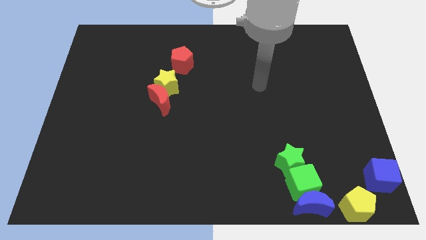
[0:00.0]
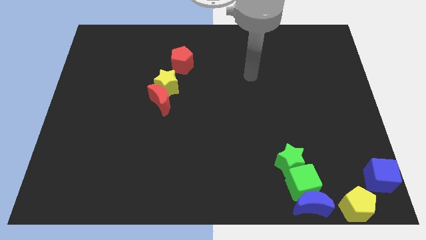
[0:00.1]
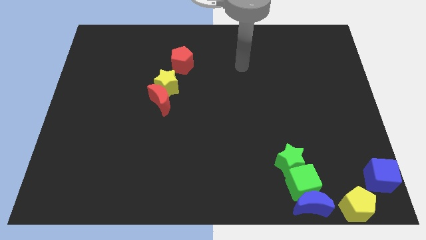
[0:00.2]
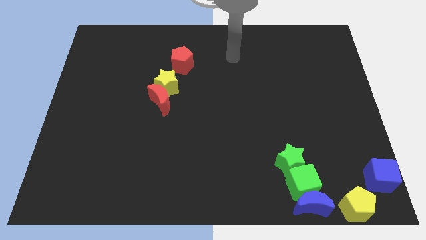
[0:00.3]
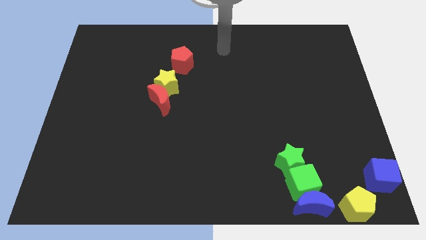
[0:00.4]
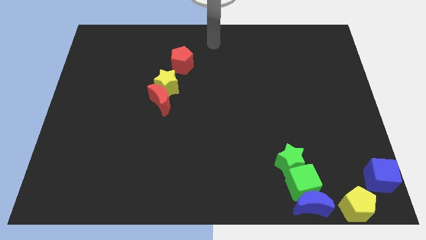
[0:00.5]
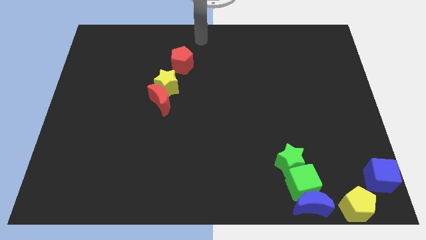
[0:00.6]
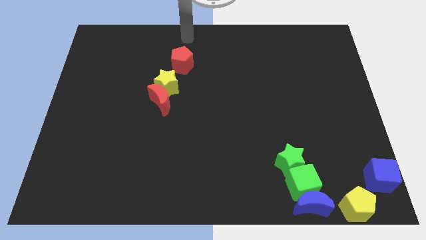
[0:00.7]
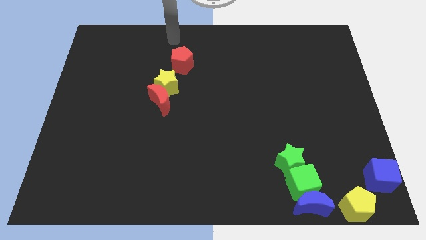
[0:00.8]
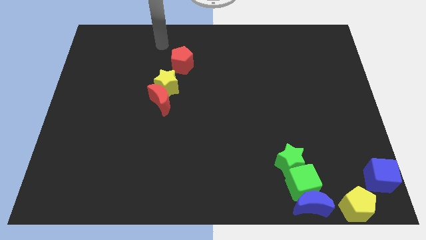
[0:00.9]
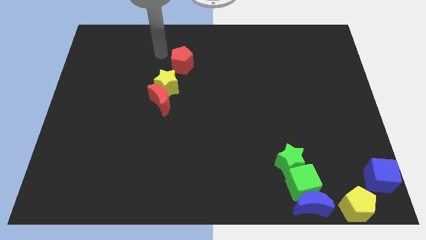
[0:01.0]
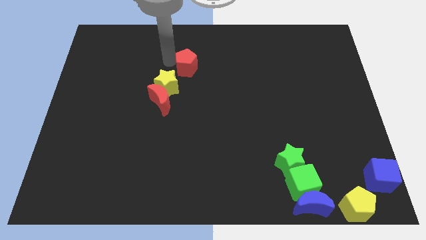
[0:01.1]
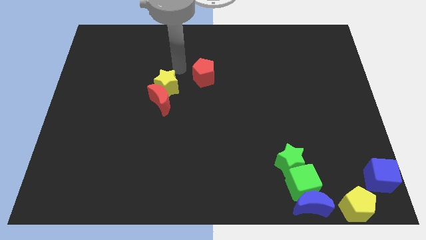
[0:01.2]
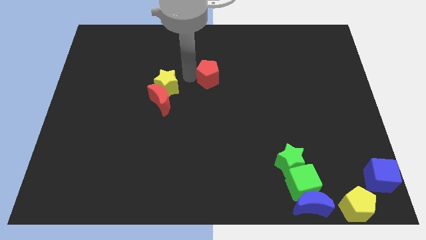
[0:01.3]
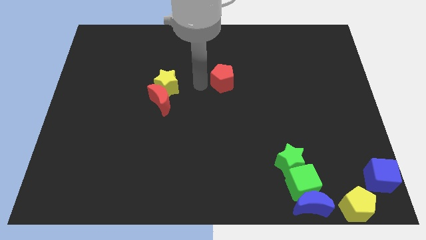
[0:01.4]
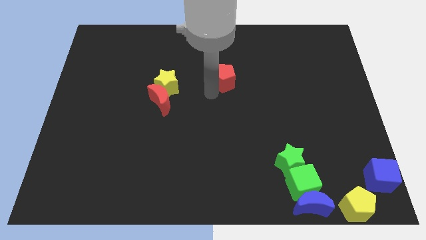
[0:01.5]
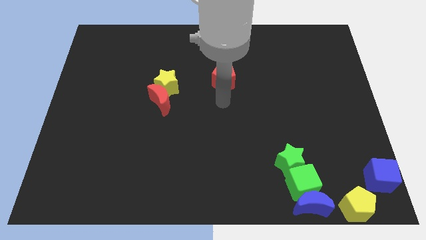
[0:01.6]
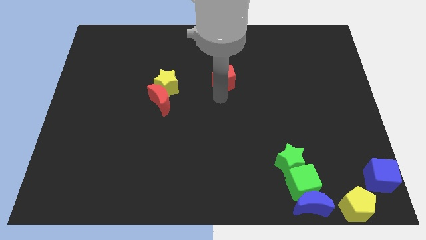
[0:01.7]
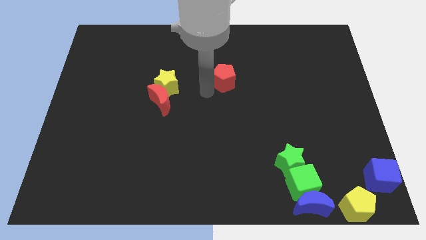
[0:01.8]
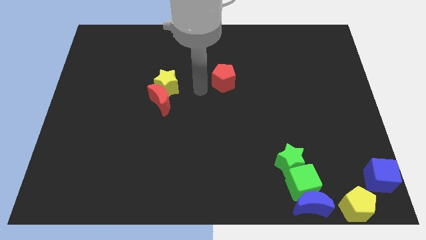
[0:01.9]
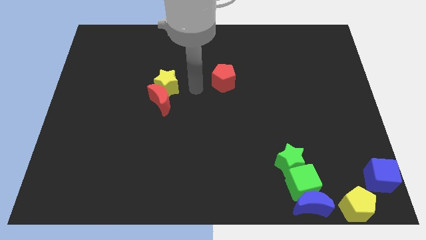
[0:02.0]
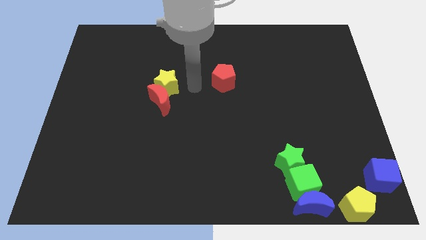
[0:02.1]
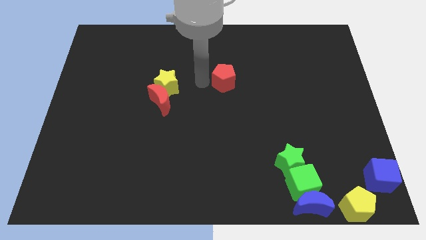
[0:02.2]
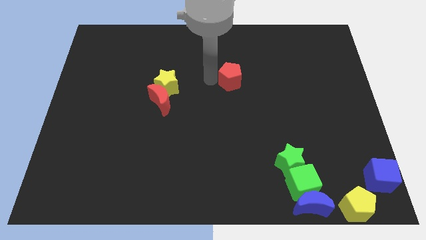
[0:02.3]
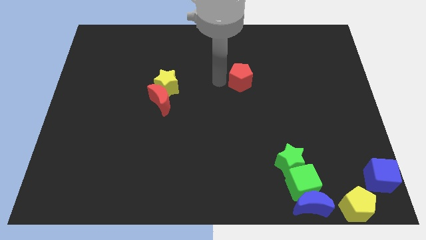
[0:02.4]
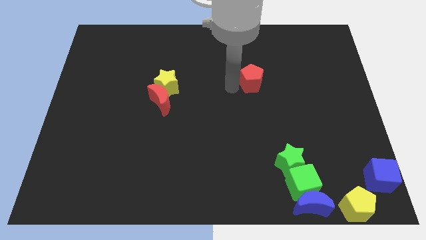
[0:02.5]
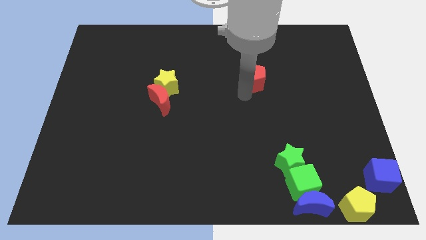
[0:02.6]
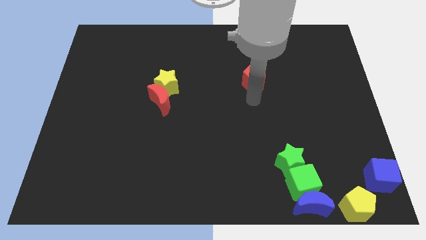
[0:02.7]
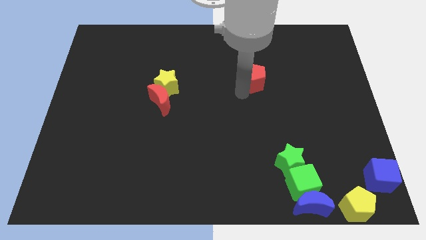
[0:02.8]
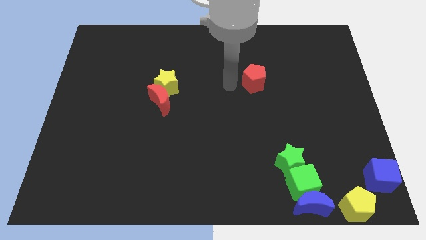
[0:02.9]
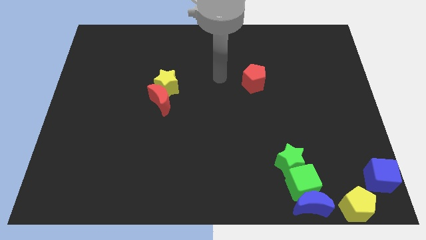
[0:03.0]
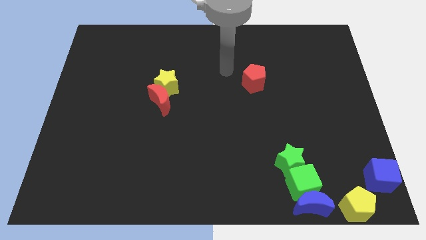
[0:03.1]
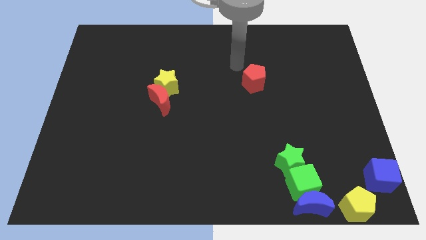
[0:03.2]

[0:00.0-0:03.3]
move the red pentagon to the horizontal right side of the yellow star

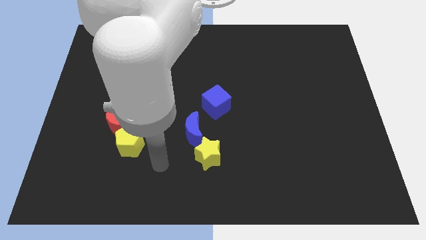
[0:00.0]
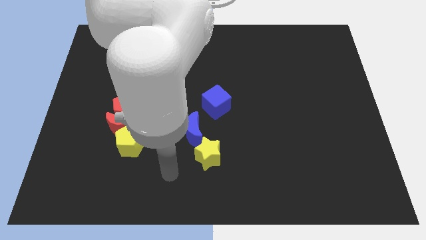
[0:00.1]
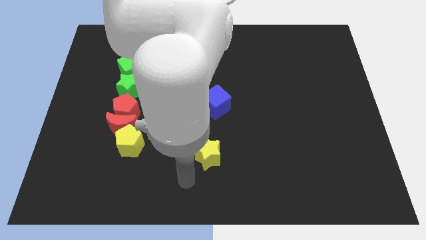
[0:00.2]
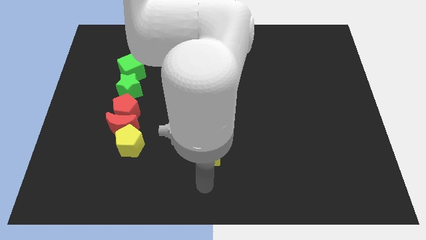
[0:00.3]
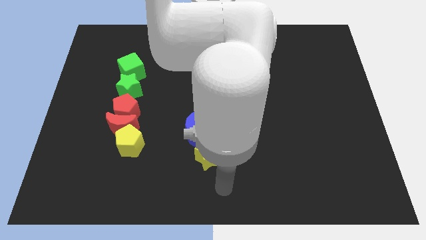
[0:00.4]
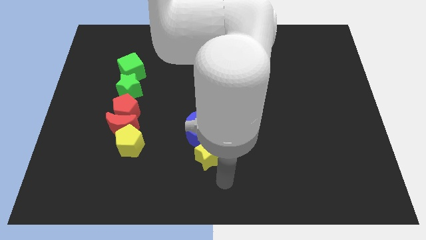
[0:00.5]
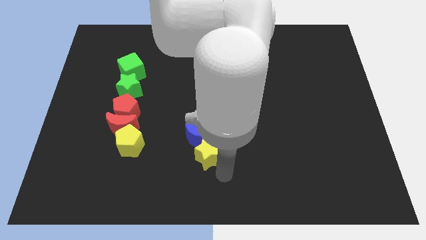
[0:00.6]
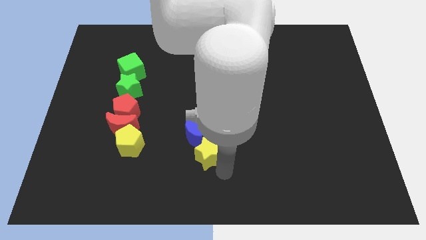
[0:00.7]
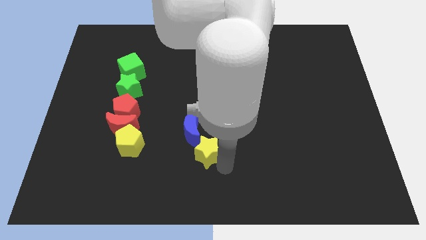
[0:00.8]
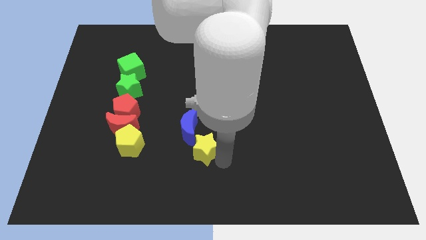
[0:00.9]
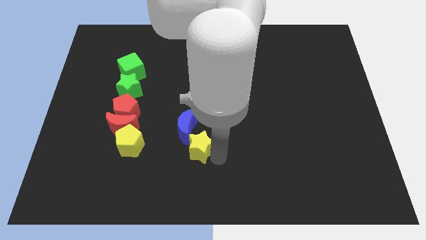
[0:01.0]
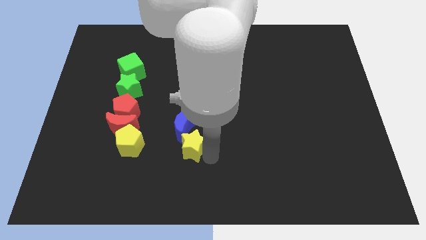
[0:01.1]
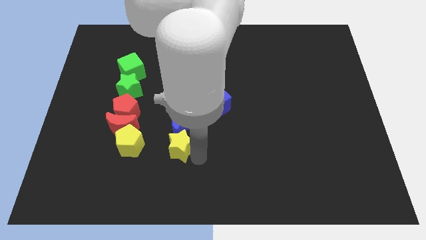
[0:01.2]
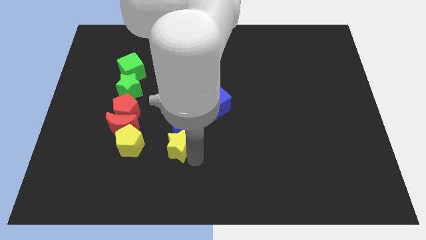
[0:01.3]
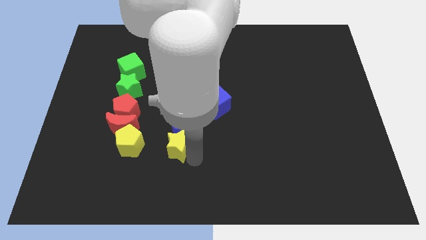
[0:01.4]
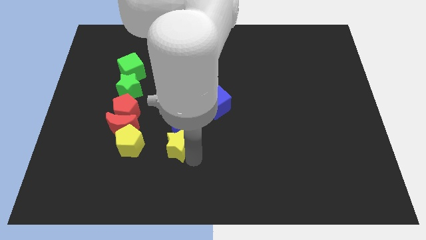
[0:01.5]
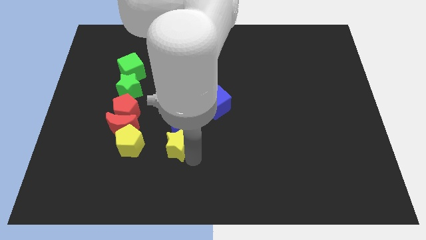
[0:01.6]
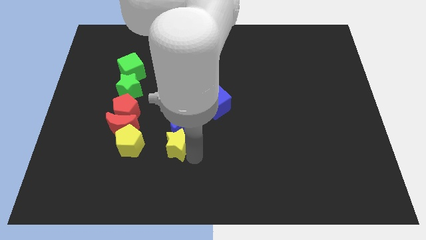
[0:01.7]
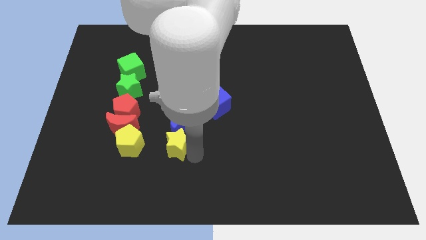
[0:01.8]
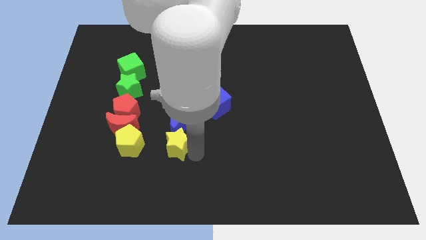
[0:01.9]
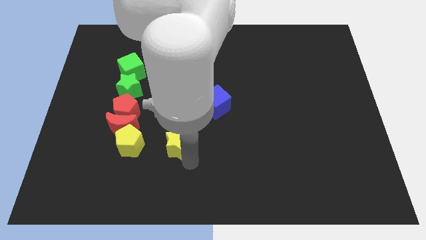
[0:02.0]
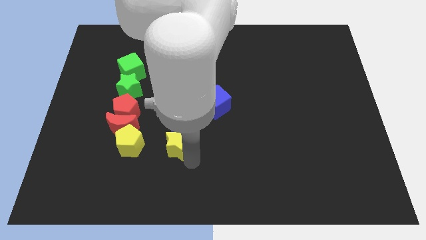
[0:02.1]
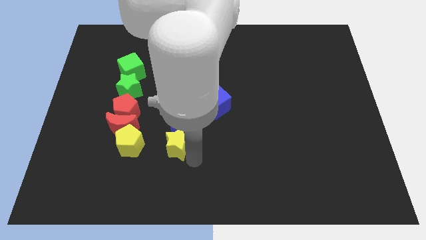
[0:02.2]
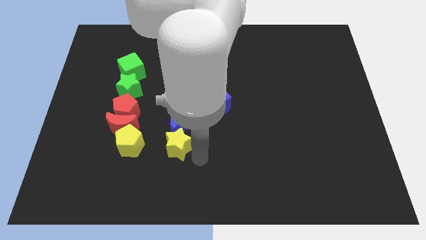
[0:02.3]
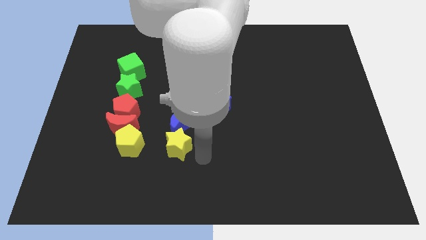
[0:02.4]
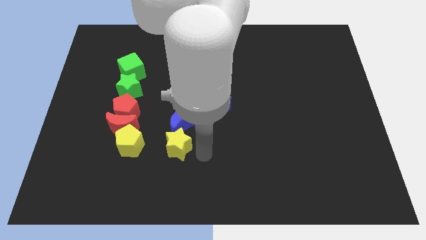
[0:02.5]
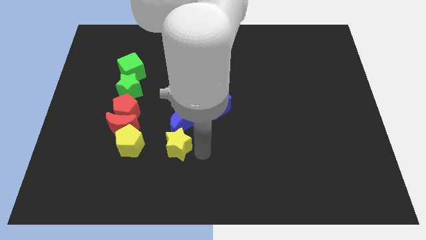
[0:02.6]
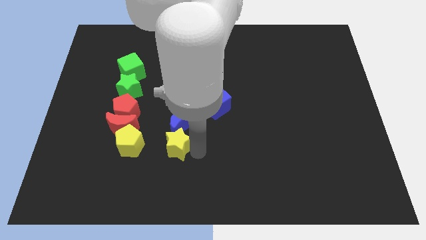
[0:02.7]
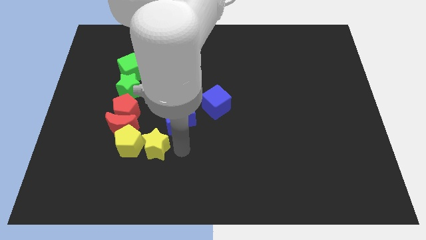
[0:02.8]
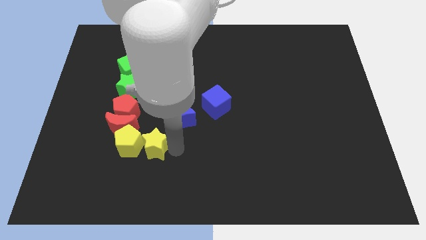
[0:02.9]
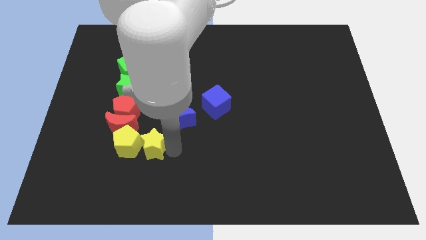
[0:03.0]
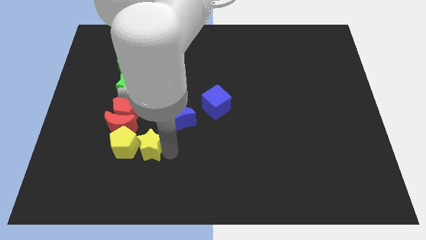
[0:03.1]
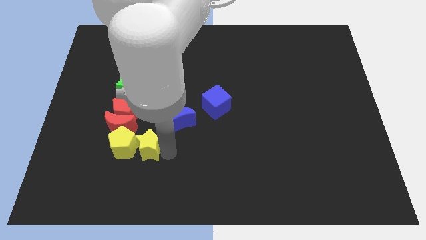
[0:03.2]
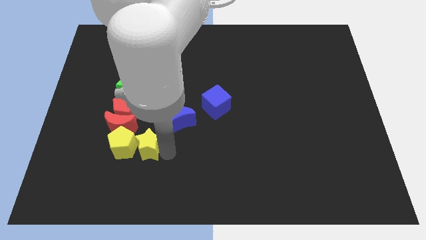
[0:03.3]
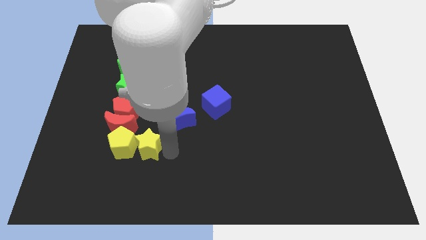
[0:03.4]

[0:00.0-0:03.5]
move yellow star into yellow pentagon

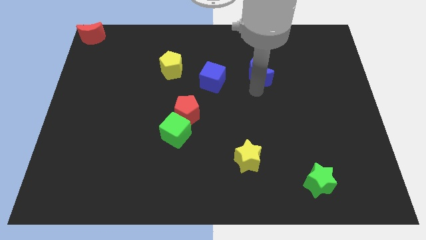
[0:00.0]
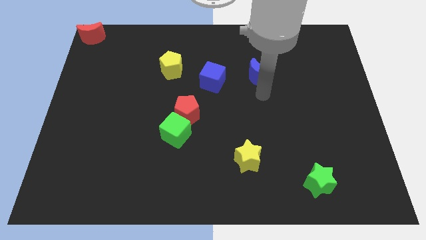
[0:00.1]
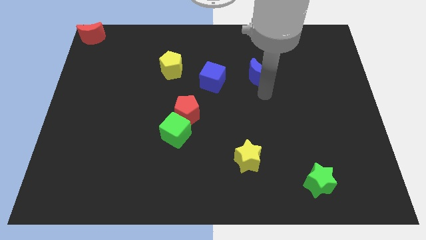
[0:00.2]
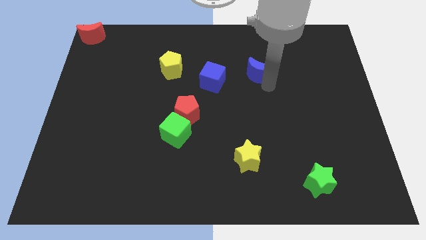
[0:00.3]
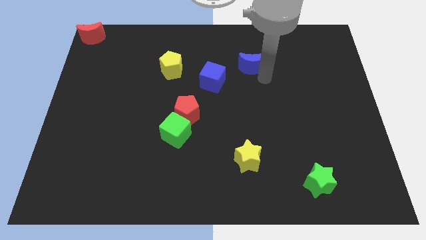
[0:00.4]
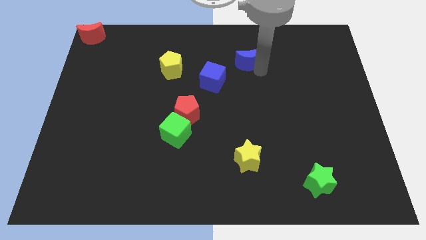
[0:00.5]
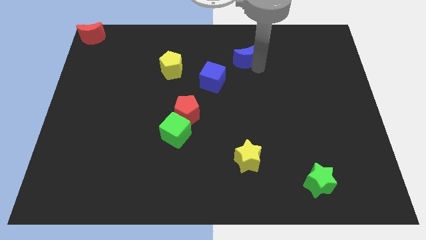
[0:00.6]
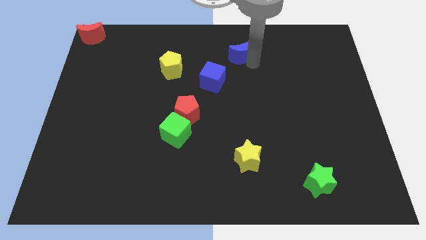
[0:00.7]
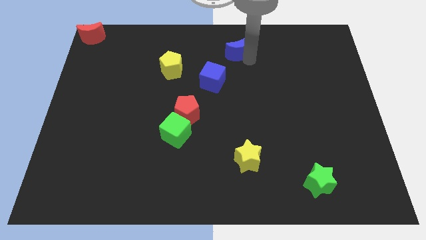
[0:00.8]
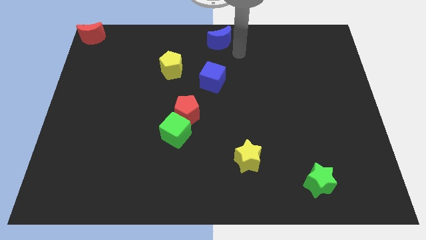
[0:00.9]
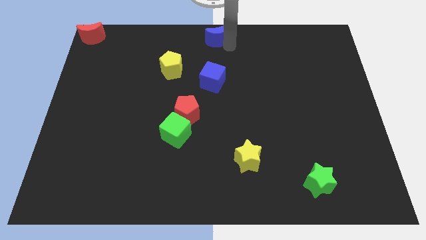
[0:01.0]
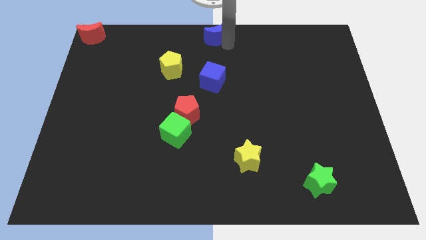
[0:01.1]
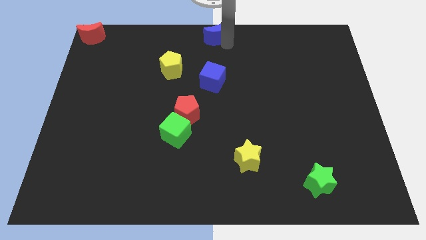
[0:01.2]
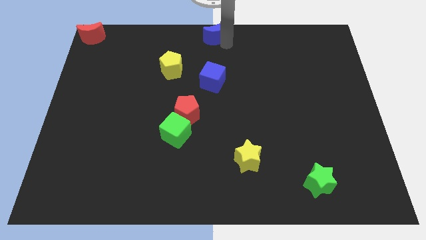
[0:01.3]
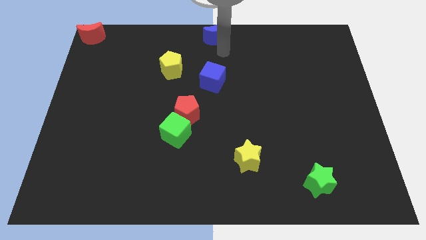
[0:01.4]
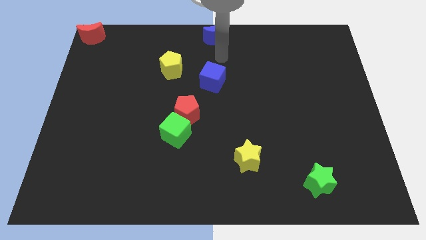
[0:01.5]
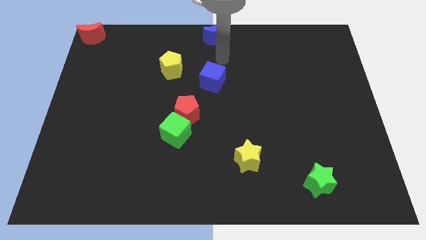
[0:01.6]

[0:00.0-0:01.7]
place the blue moon to the top center of the board

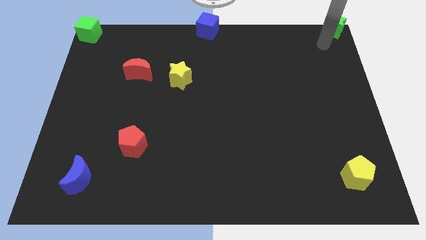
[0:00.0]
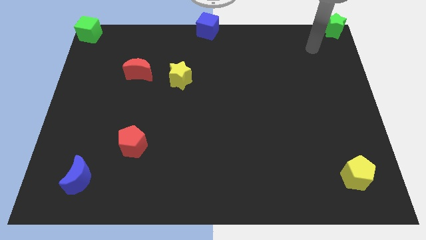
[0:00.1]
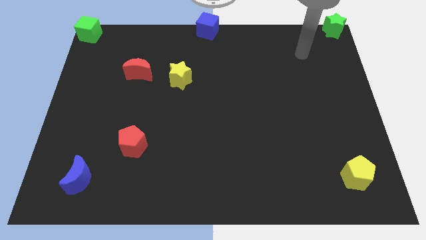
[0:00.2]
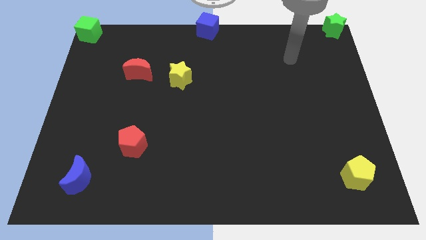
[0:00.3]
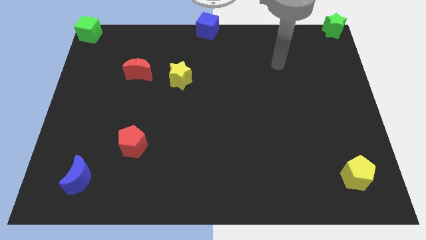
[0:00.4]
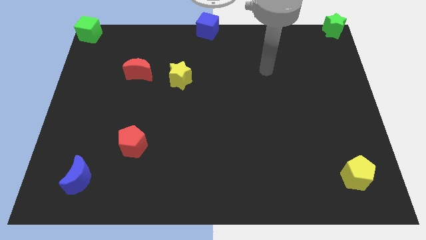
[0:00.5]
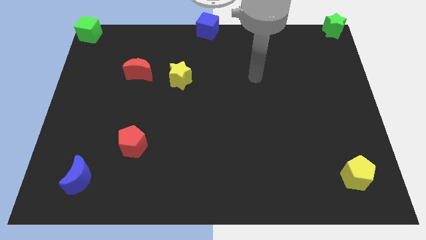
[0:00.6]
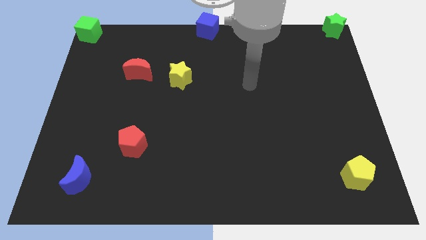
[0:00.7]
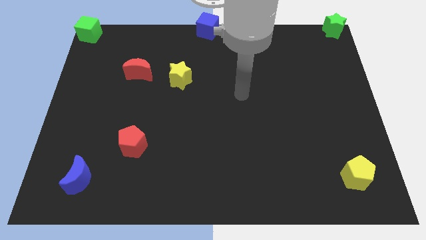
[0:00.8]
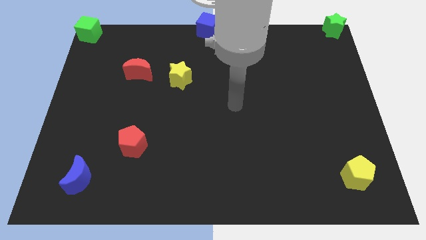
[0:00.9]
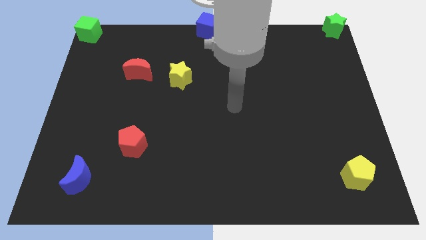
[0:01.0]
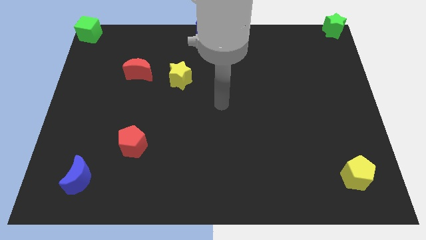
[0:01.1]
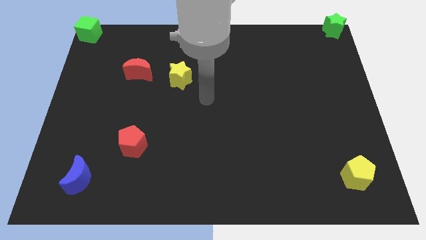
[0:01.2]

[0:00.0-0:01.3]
move your arm to the center of the board
